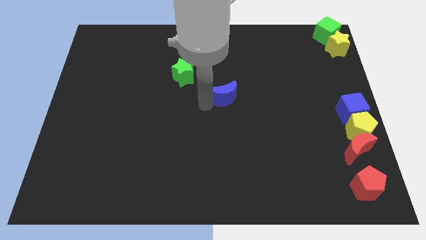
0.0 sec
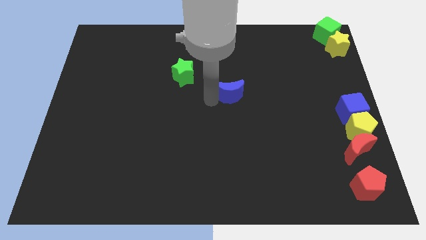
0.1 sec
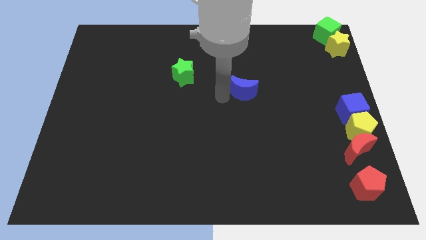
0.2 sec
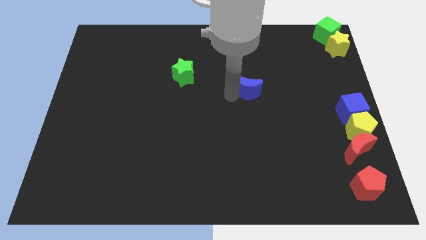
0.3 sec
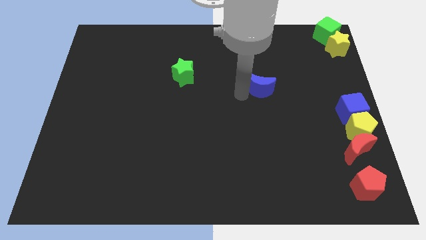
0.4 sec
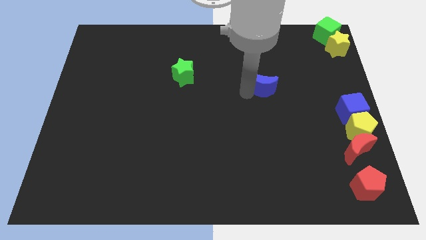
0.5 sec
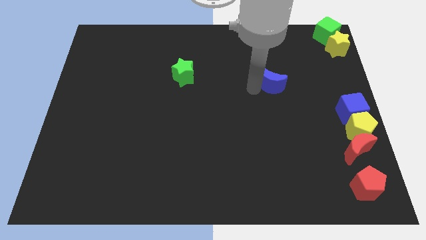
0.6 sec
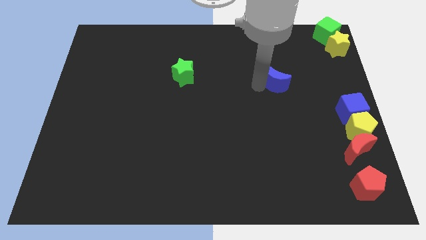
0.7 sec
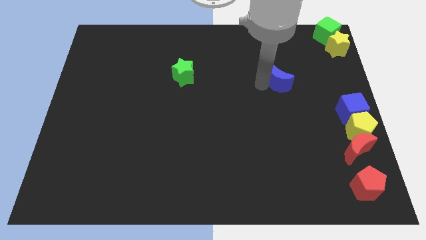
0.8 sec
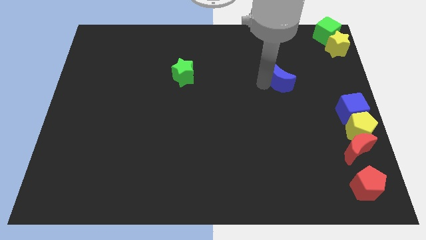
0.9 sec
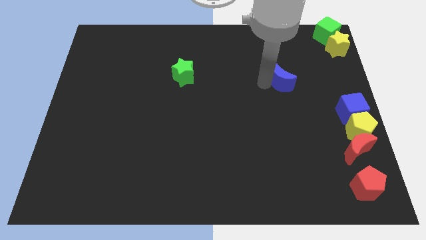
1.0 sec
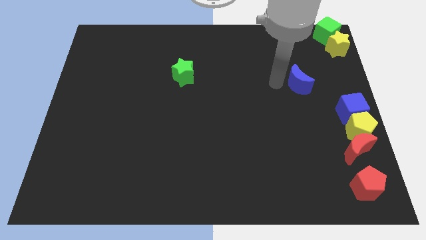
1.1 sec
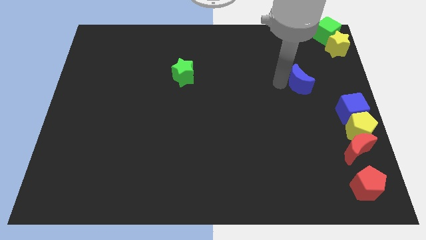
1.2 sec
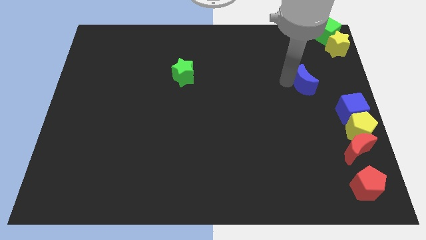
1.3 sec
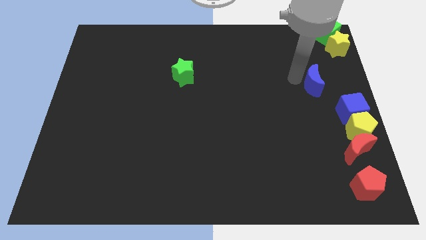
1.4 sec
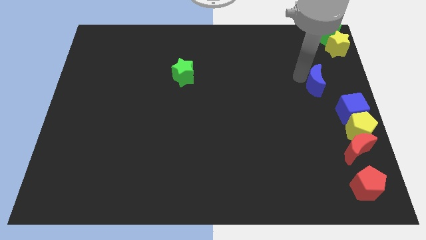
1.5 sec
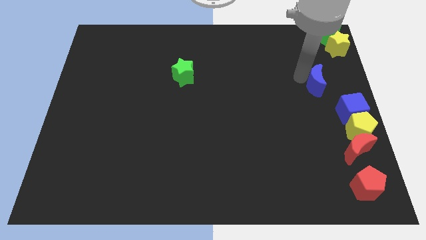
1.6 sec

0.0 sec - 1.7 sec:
move the blue moon to the right side of the board

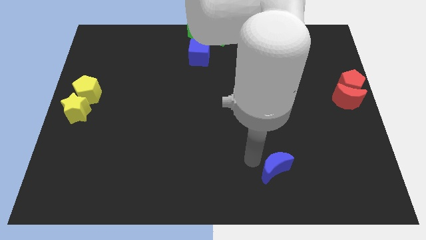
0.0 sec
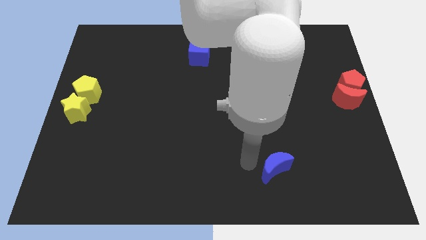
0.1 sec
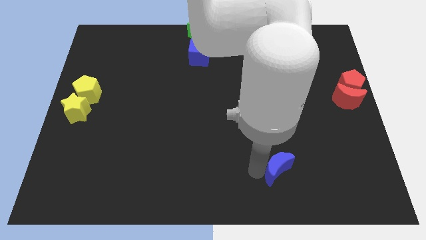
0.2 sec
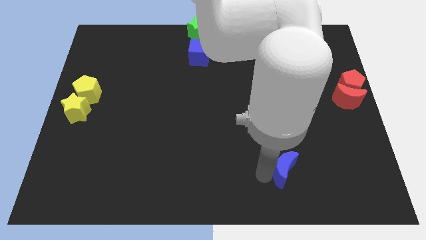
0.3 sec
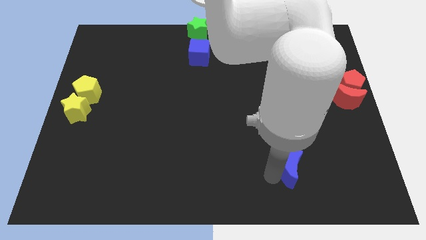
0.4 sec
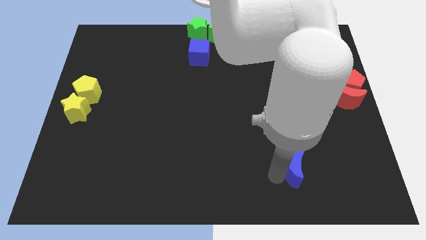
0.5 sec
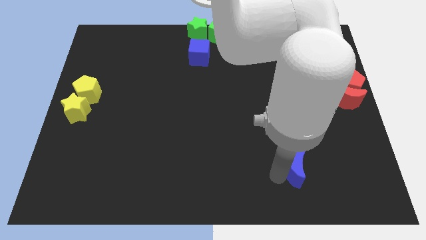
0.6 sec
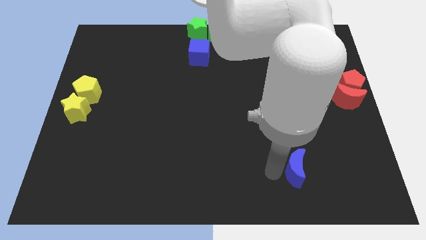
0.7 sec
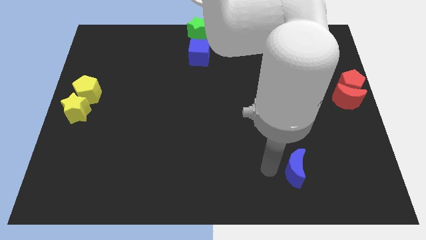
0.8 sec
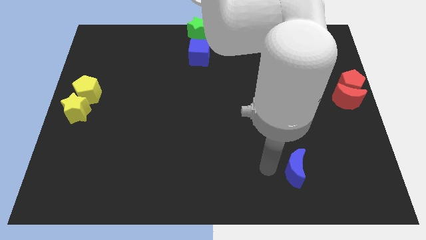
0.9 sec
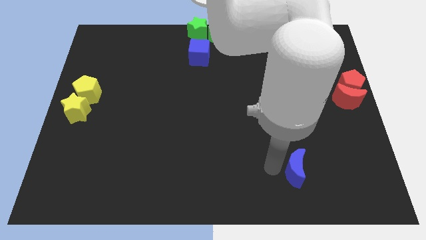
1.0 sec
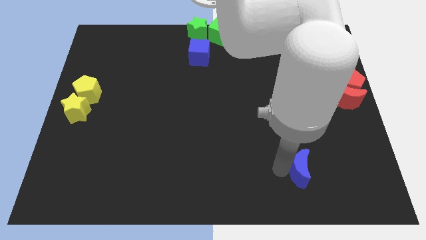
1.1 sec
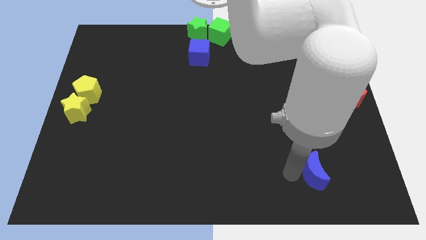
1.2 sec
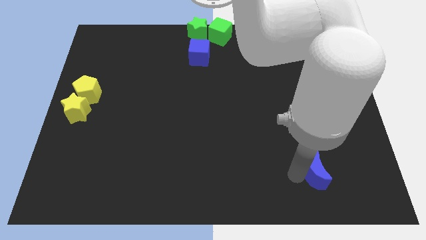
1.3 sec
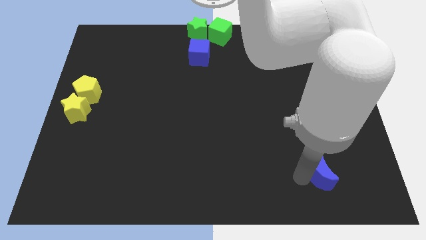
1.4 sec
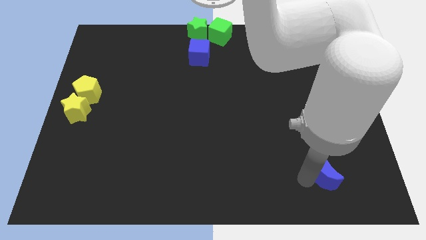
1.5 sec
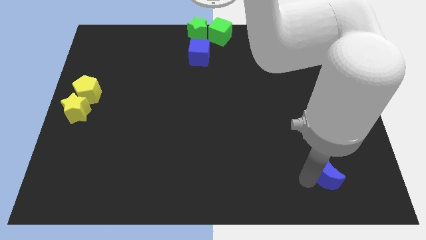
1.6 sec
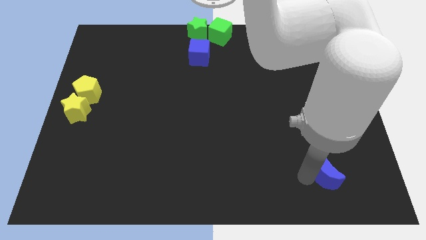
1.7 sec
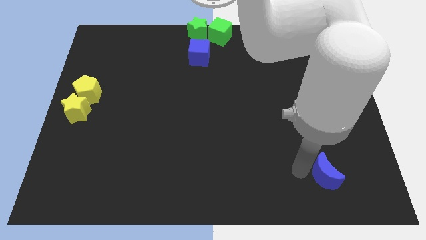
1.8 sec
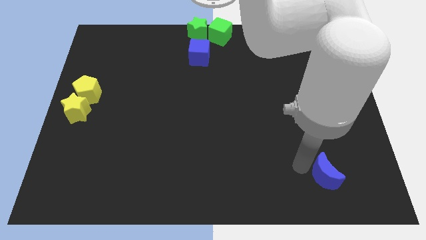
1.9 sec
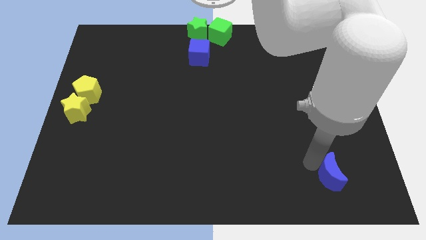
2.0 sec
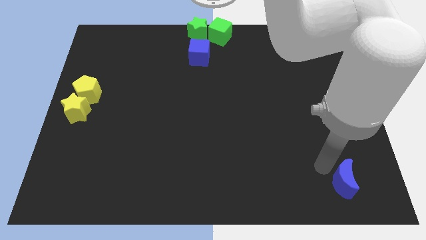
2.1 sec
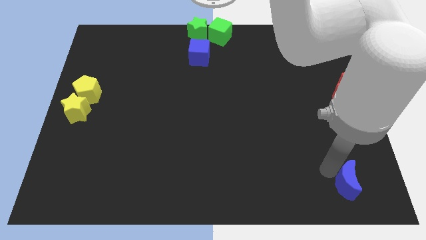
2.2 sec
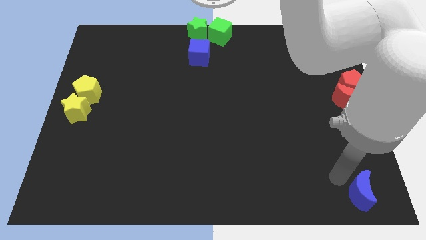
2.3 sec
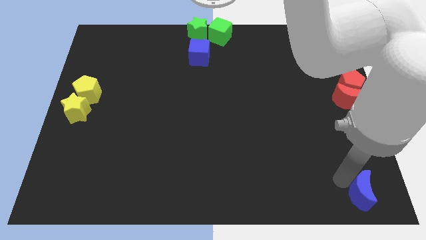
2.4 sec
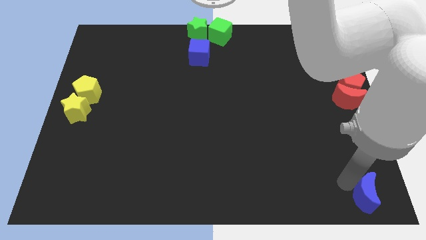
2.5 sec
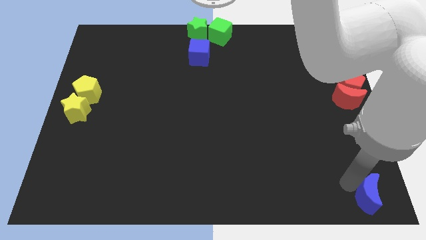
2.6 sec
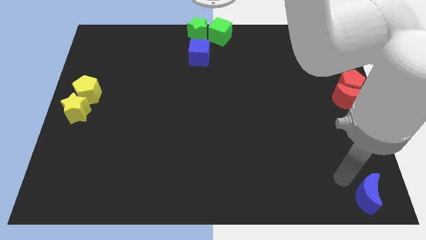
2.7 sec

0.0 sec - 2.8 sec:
place the blue crescent at the bottom right corner of the board

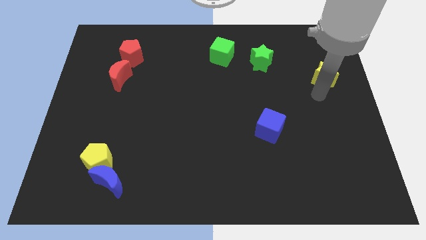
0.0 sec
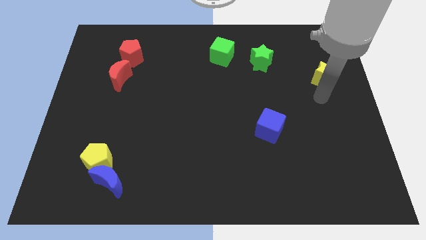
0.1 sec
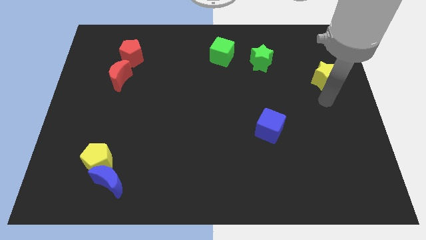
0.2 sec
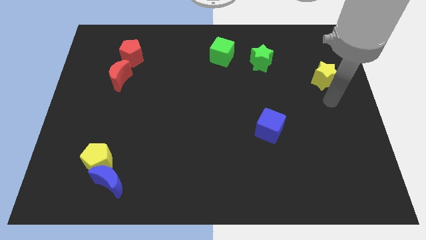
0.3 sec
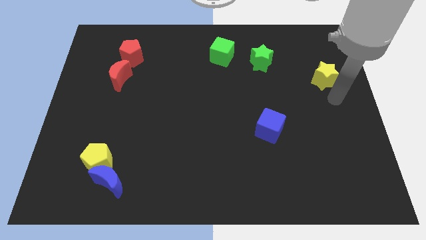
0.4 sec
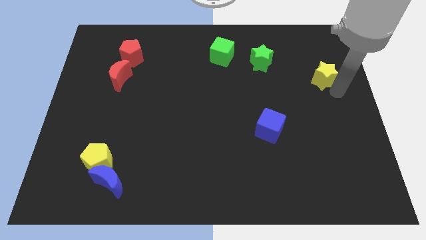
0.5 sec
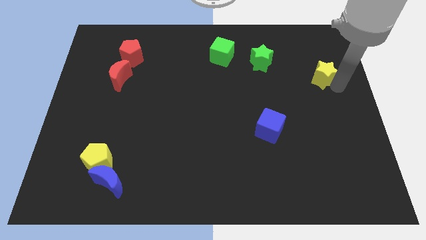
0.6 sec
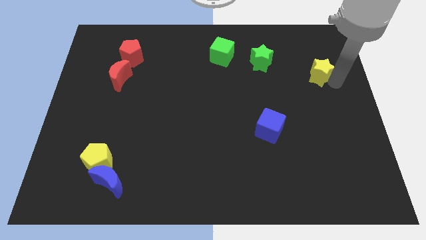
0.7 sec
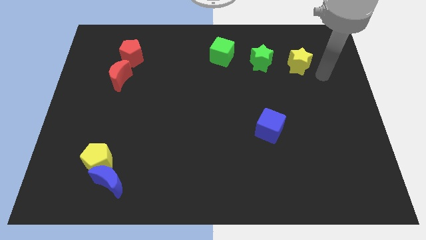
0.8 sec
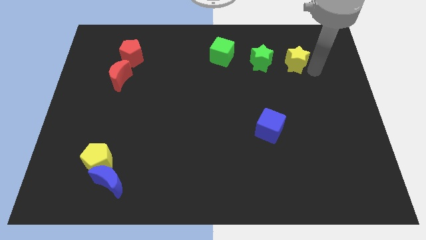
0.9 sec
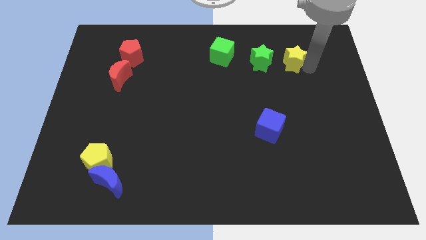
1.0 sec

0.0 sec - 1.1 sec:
move the yellow star right to the green star

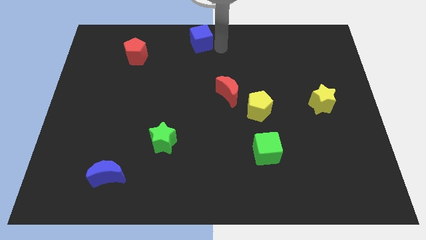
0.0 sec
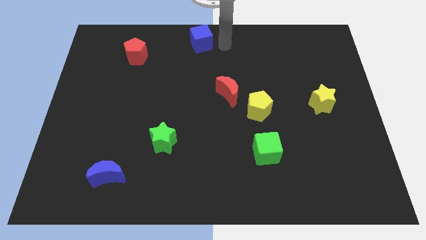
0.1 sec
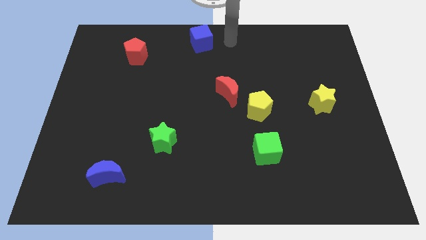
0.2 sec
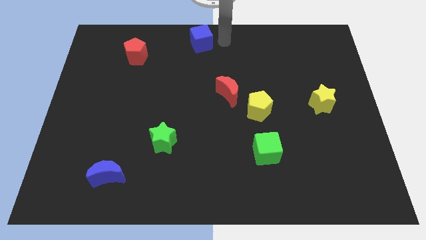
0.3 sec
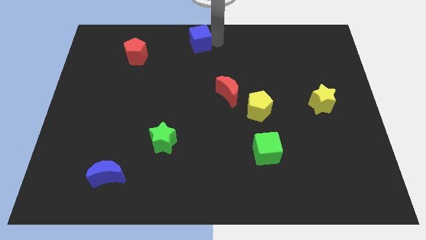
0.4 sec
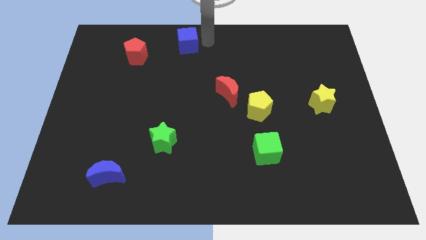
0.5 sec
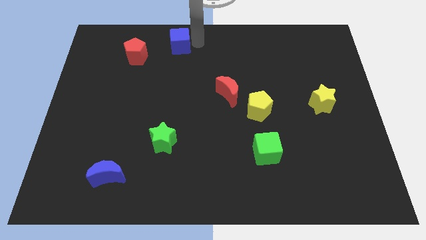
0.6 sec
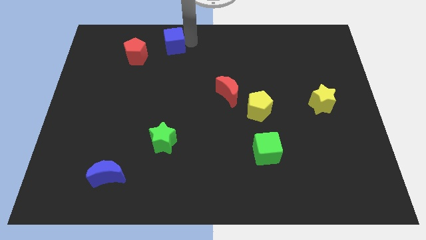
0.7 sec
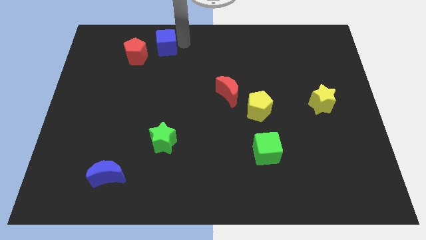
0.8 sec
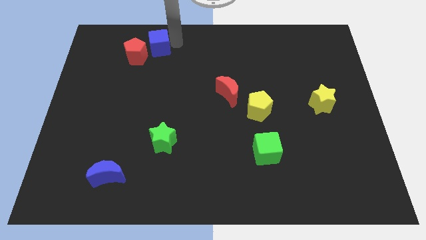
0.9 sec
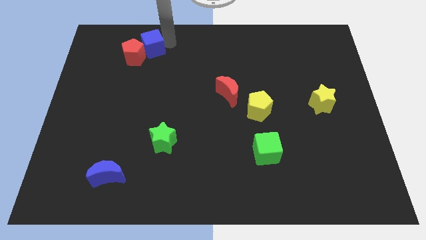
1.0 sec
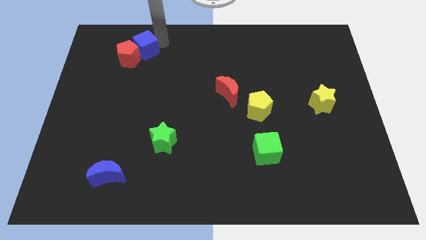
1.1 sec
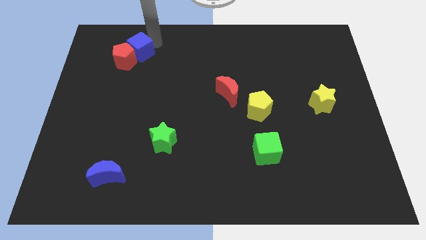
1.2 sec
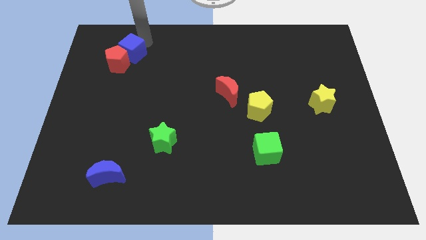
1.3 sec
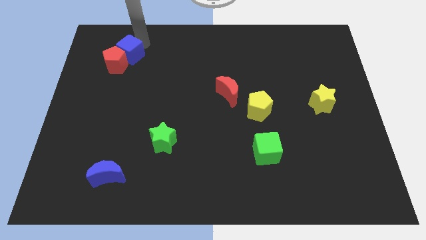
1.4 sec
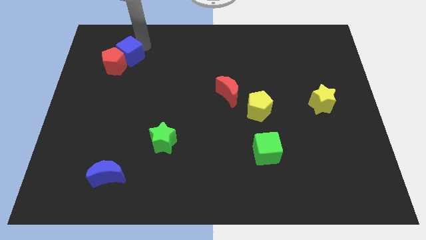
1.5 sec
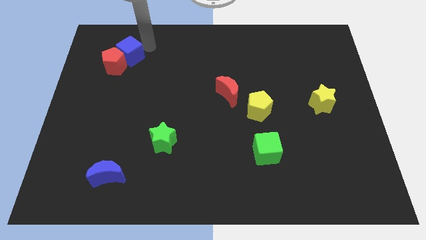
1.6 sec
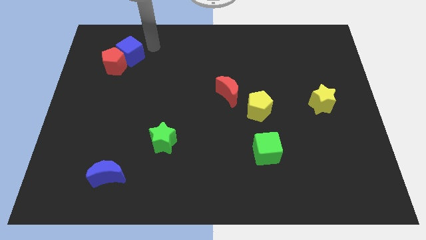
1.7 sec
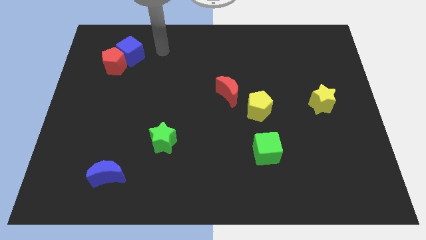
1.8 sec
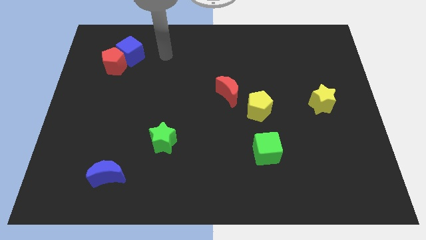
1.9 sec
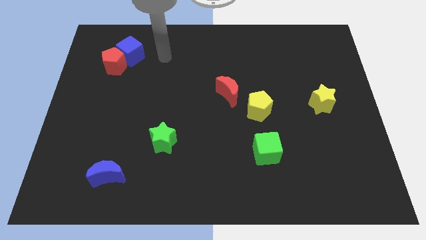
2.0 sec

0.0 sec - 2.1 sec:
put the blue cube and red pentagon together

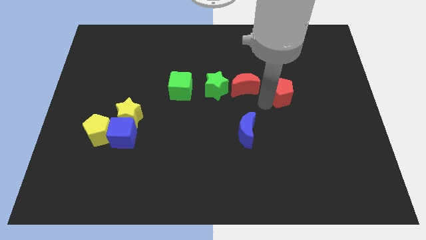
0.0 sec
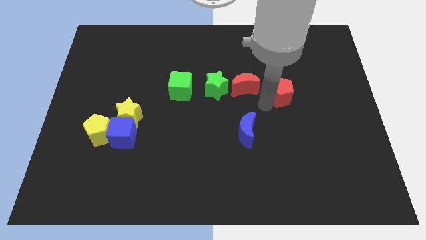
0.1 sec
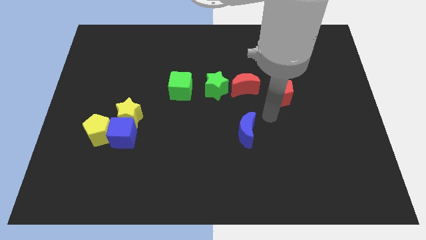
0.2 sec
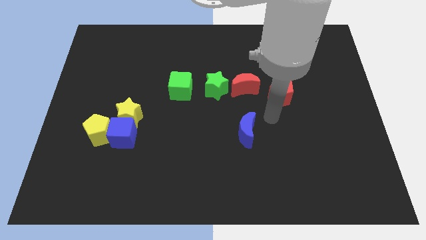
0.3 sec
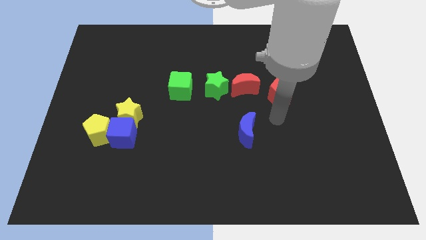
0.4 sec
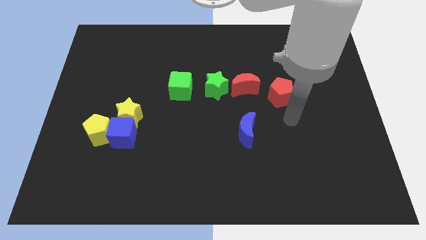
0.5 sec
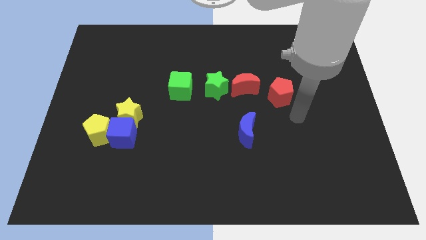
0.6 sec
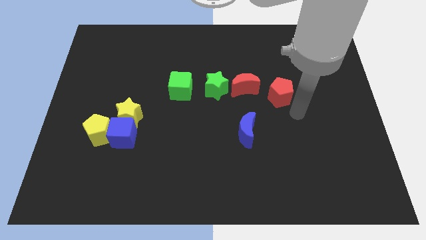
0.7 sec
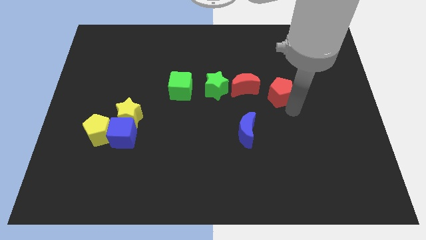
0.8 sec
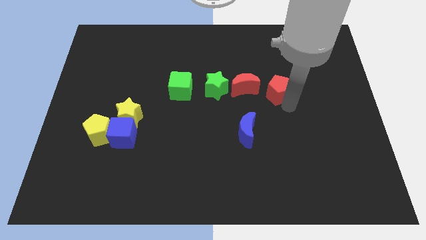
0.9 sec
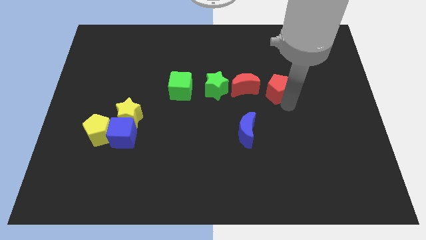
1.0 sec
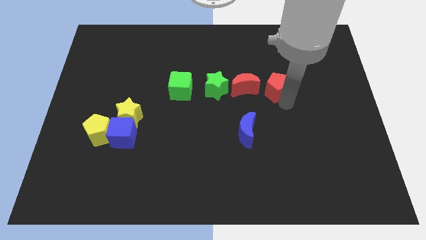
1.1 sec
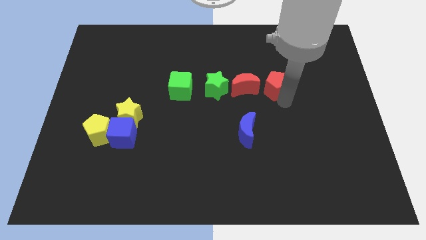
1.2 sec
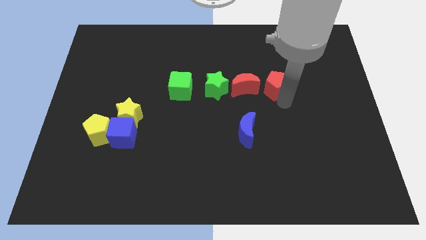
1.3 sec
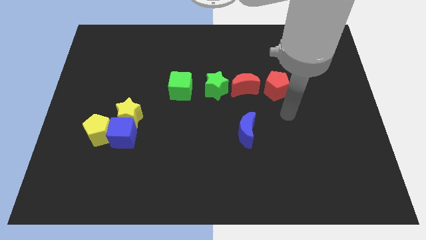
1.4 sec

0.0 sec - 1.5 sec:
push the red pentagon at the right side of the red moon
